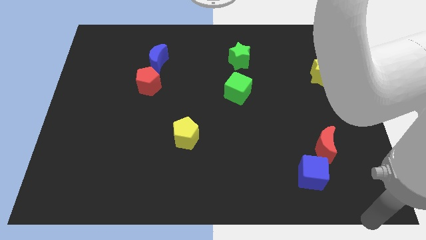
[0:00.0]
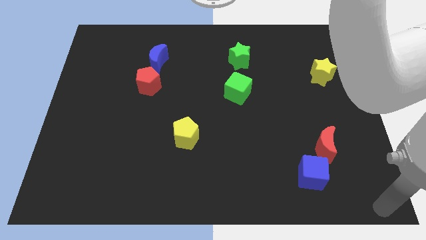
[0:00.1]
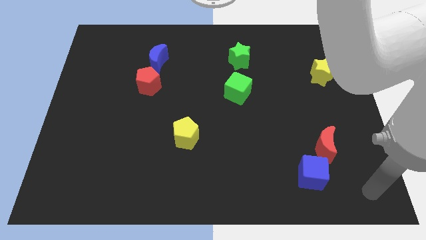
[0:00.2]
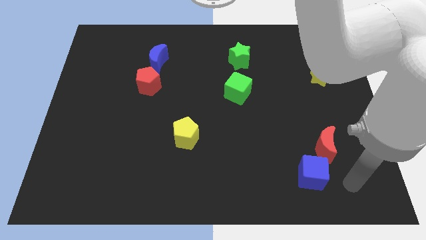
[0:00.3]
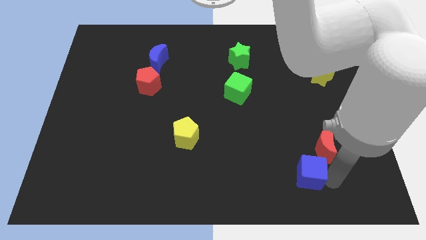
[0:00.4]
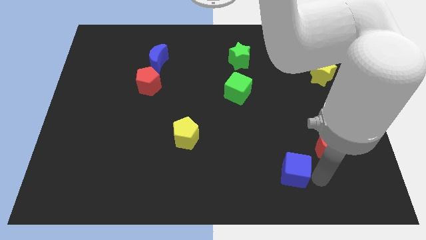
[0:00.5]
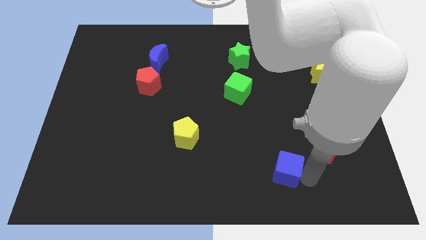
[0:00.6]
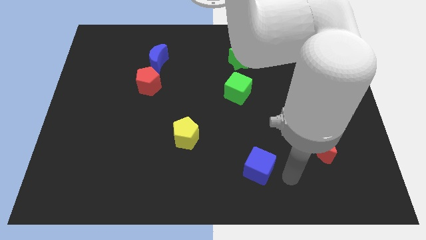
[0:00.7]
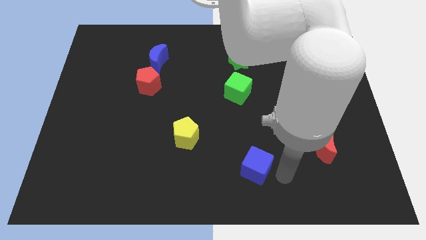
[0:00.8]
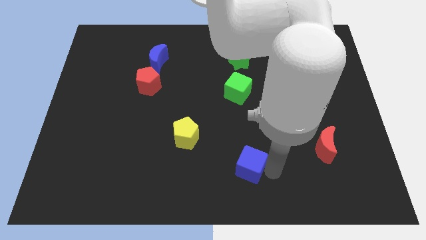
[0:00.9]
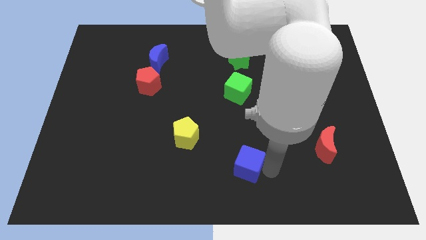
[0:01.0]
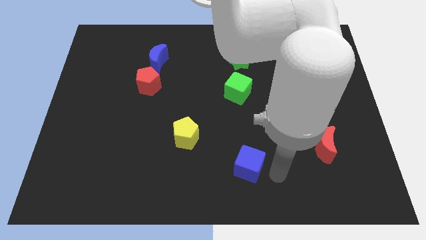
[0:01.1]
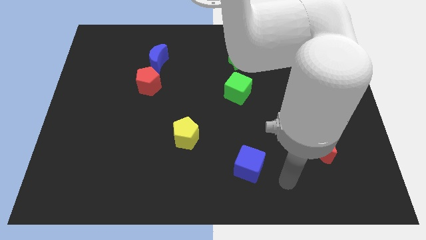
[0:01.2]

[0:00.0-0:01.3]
move the blue cube below the green cube

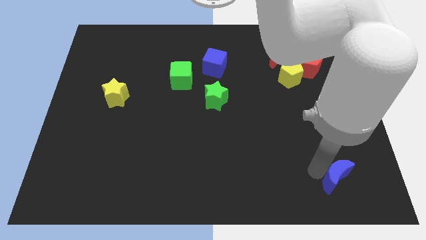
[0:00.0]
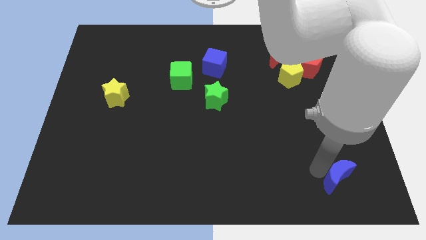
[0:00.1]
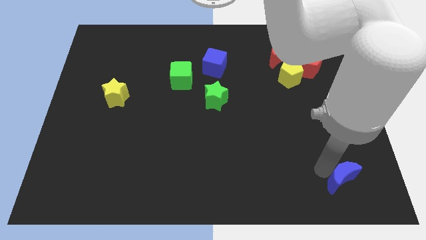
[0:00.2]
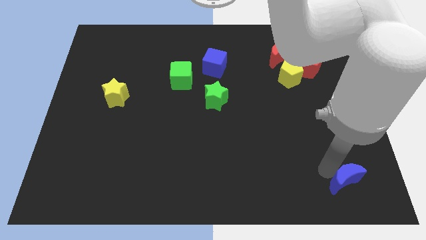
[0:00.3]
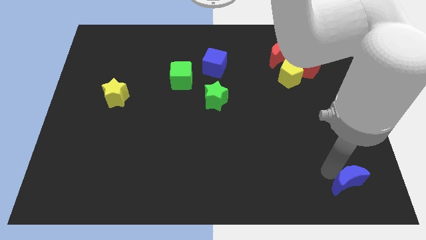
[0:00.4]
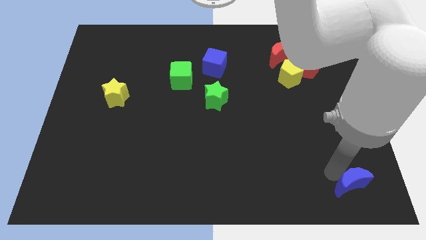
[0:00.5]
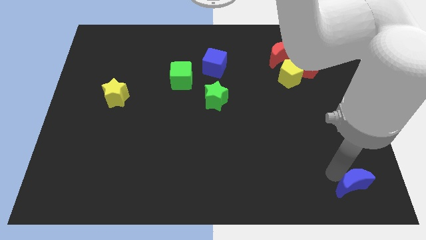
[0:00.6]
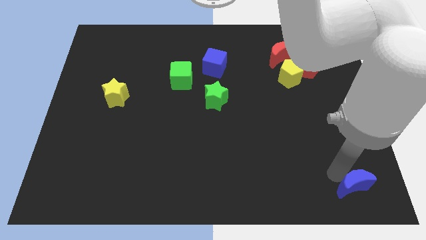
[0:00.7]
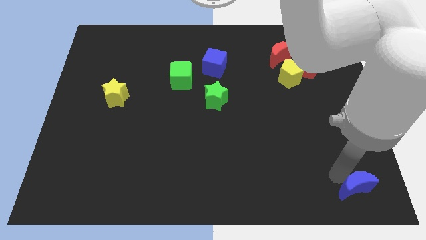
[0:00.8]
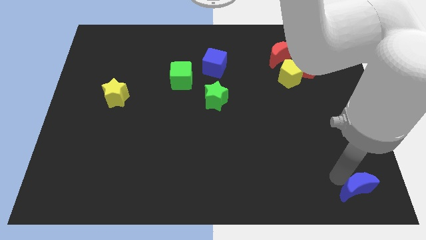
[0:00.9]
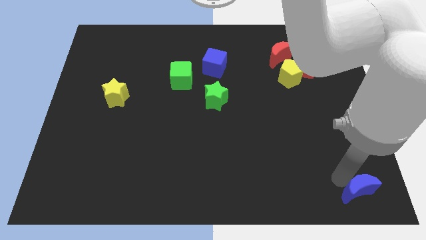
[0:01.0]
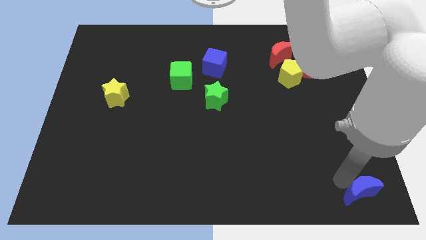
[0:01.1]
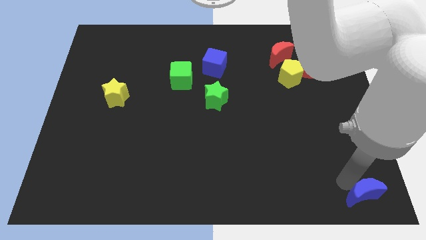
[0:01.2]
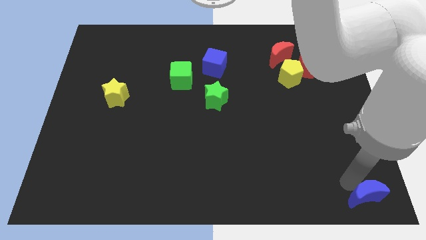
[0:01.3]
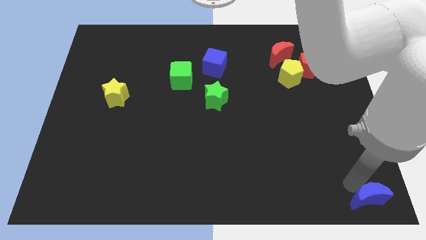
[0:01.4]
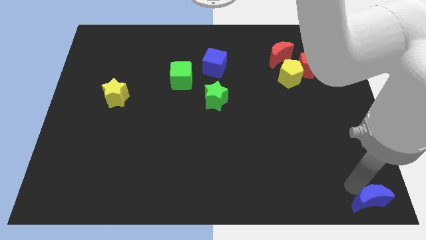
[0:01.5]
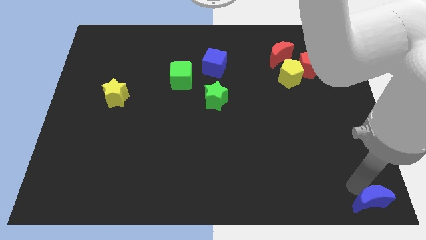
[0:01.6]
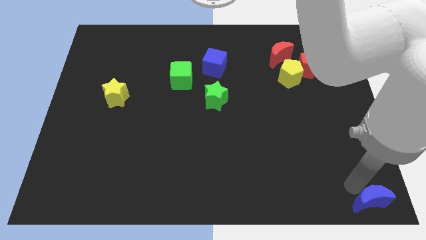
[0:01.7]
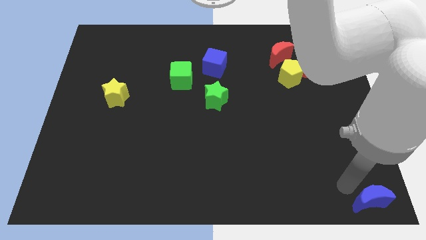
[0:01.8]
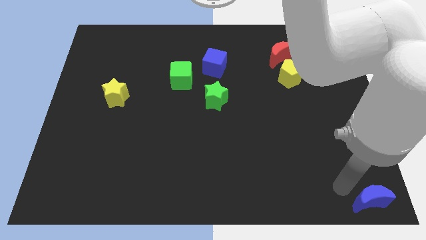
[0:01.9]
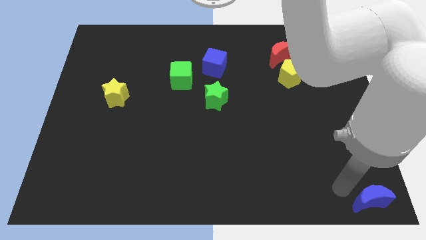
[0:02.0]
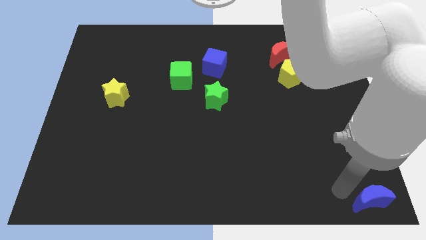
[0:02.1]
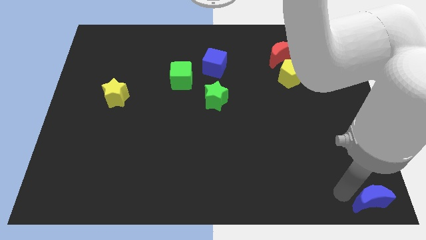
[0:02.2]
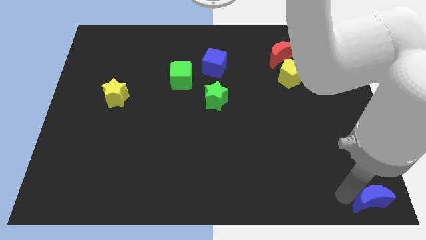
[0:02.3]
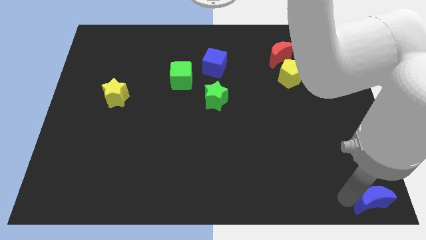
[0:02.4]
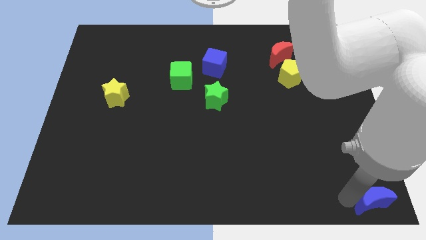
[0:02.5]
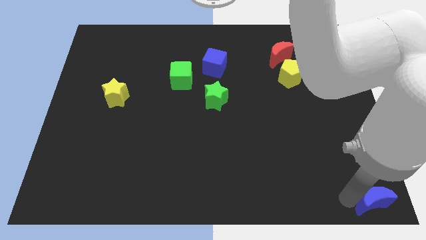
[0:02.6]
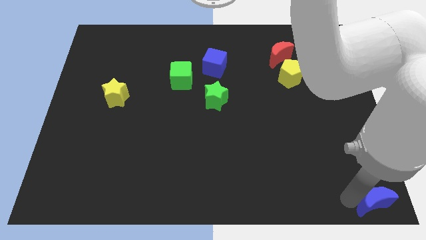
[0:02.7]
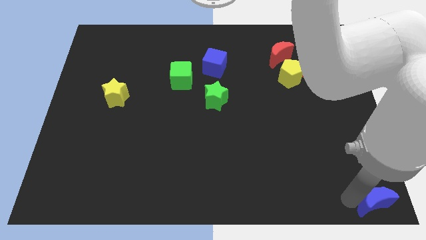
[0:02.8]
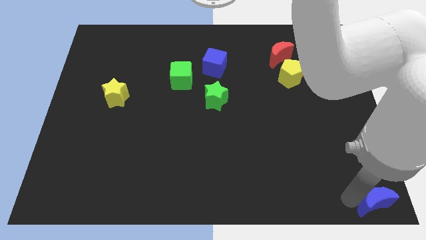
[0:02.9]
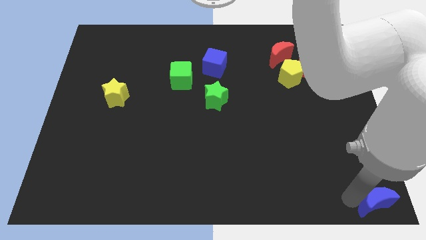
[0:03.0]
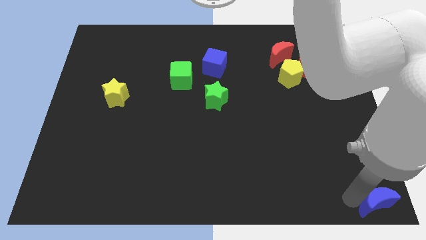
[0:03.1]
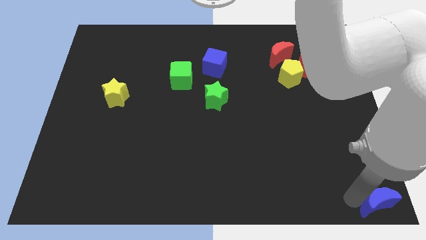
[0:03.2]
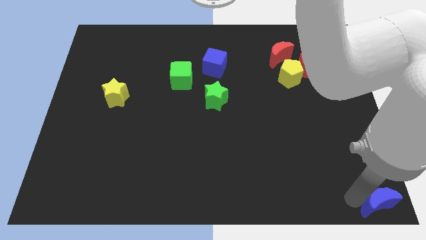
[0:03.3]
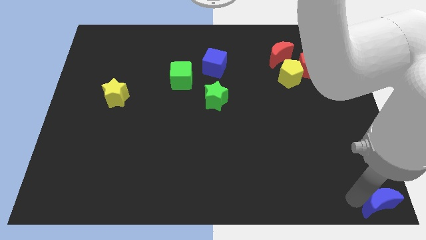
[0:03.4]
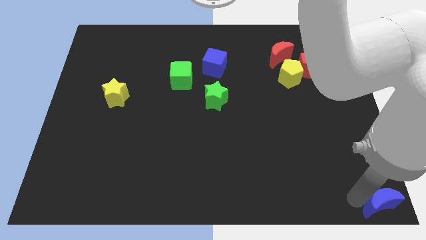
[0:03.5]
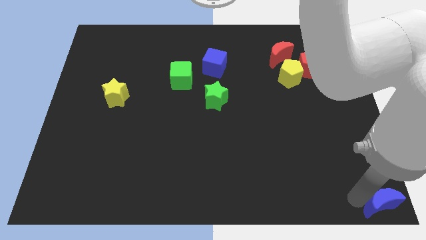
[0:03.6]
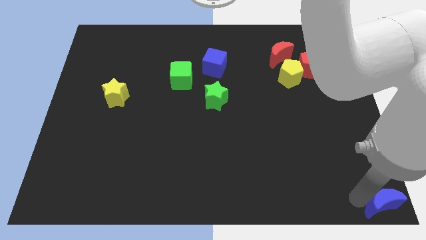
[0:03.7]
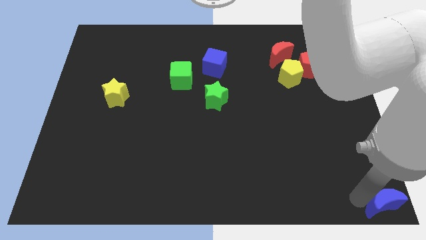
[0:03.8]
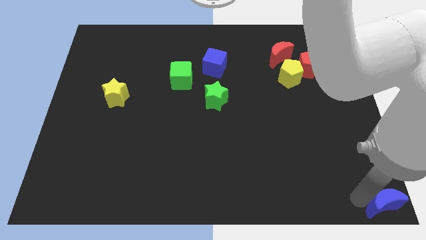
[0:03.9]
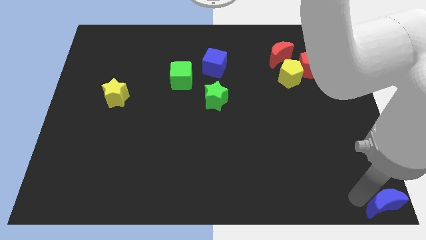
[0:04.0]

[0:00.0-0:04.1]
push the blue crescent at the bottom right corner of the board

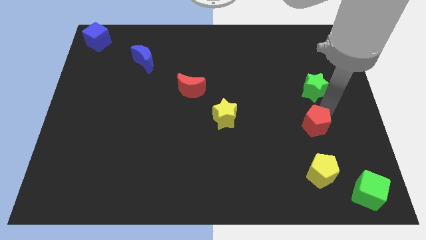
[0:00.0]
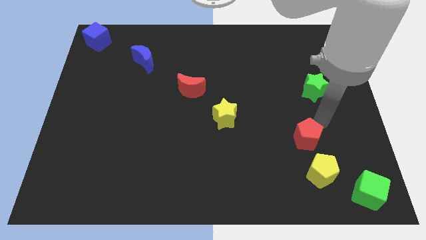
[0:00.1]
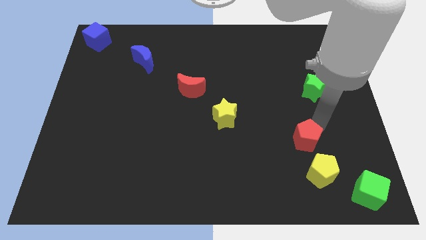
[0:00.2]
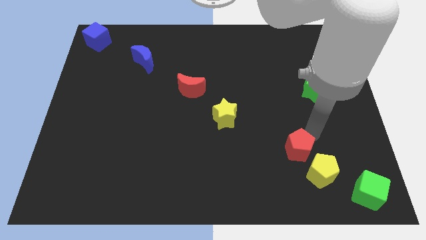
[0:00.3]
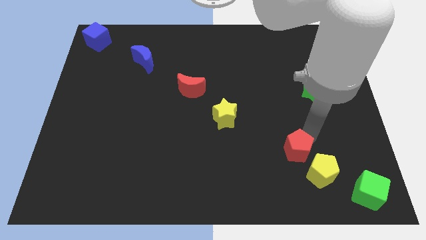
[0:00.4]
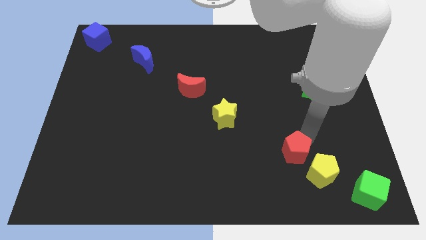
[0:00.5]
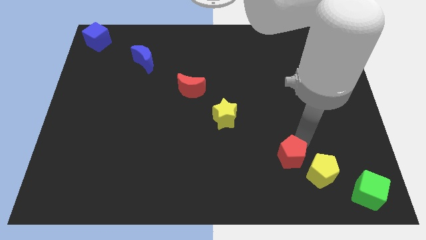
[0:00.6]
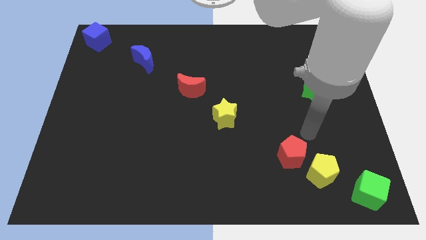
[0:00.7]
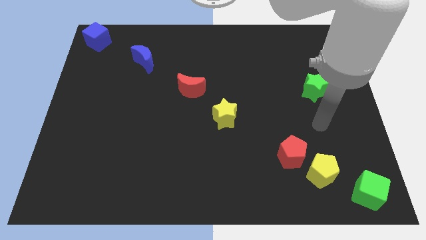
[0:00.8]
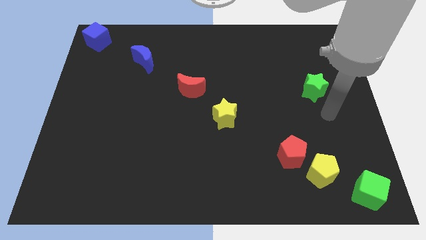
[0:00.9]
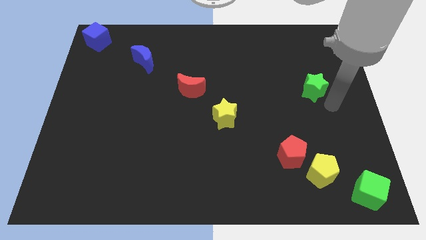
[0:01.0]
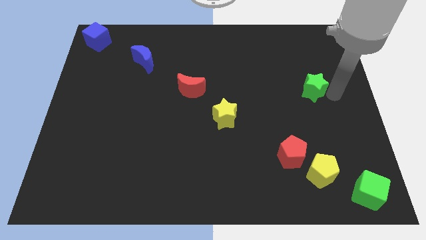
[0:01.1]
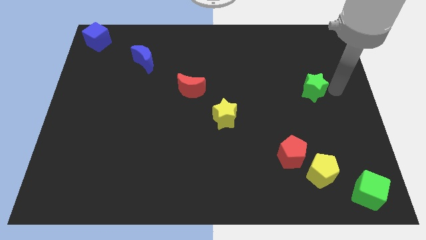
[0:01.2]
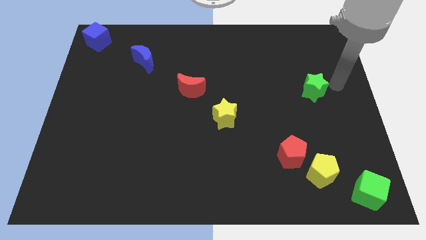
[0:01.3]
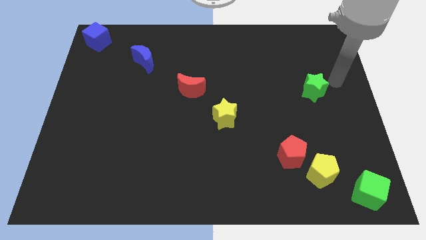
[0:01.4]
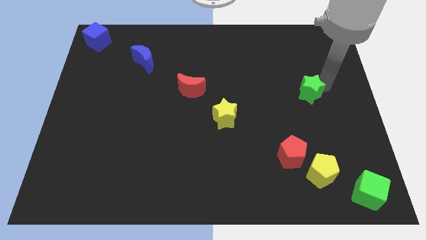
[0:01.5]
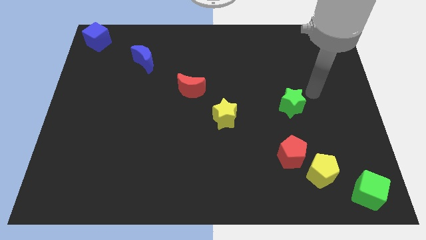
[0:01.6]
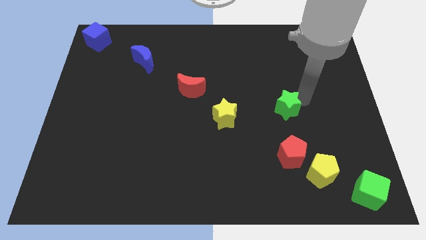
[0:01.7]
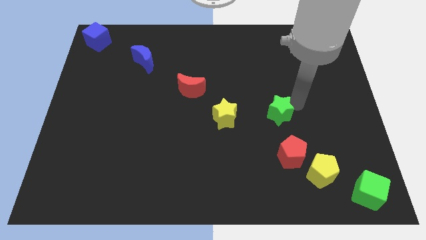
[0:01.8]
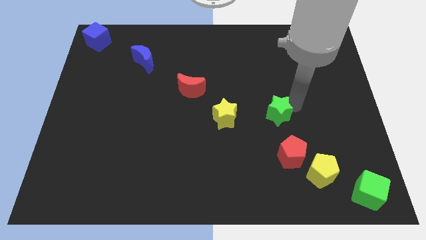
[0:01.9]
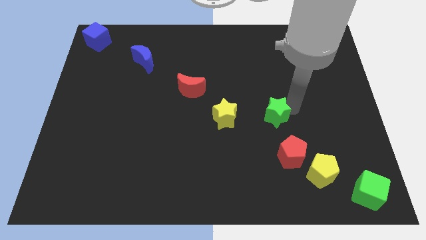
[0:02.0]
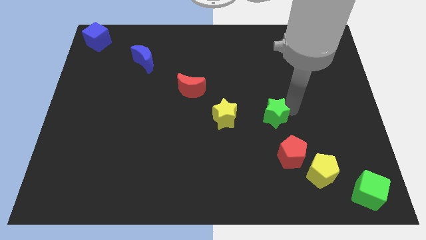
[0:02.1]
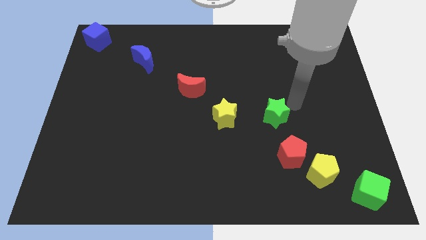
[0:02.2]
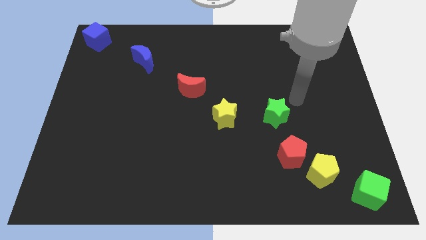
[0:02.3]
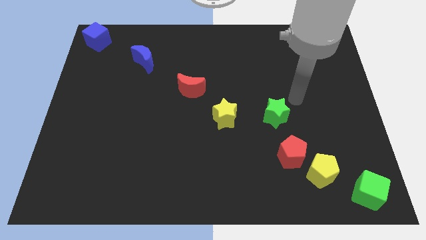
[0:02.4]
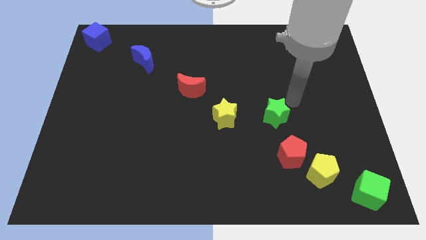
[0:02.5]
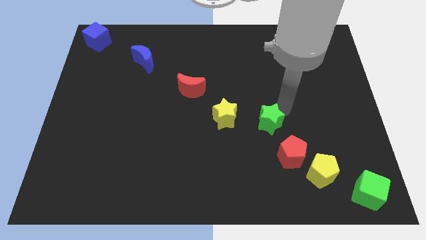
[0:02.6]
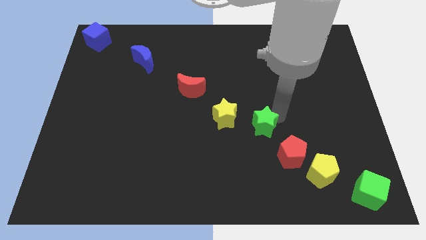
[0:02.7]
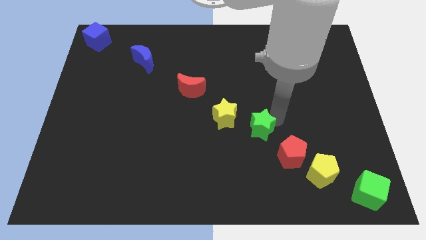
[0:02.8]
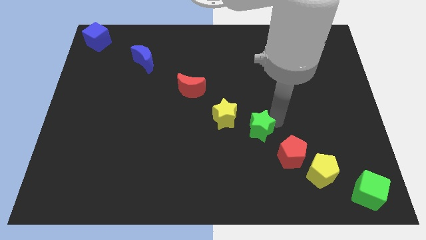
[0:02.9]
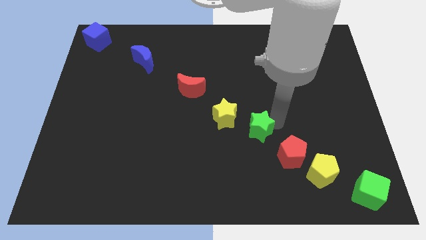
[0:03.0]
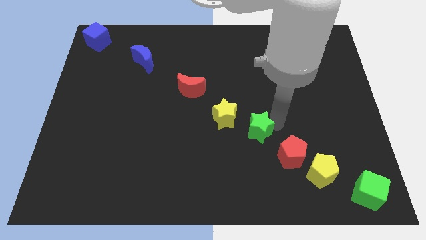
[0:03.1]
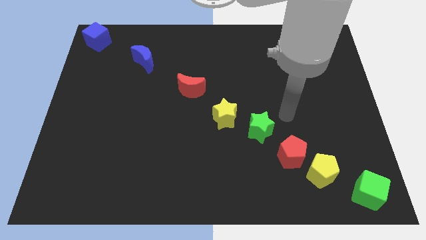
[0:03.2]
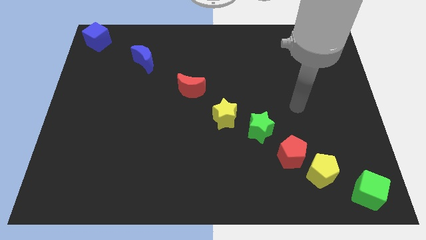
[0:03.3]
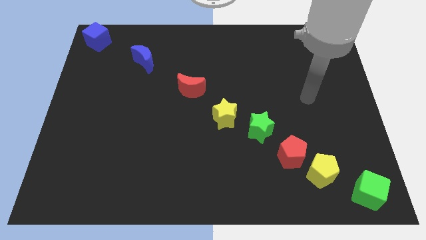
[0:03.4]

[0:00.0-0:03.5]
push green star in between yellow star and red pentagon to form a diagonal line of blocks

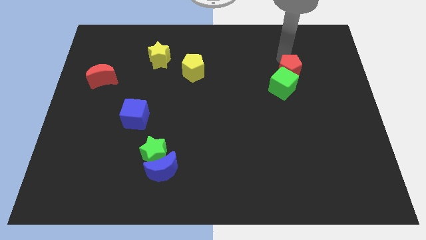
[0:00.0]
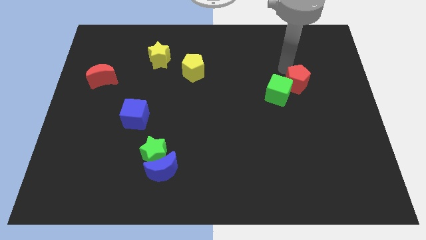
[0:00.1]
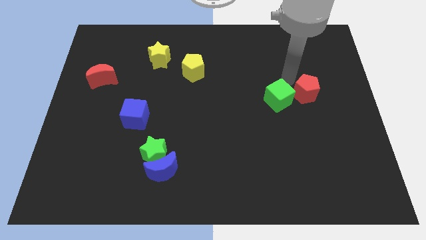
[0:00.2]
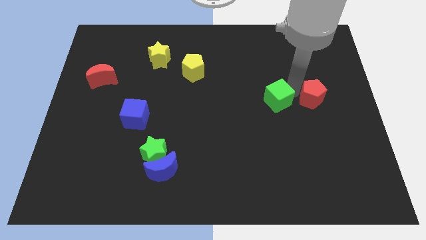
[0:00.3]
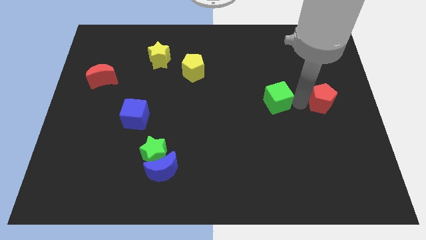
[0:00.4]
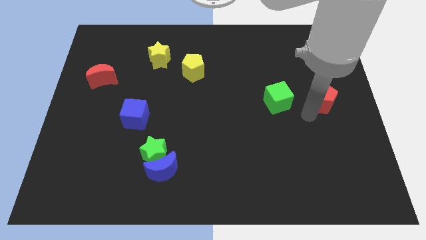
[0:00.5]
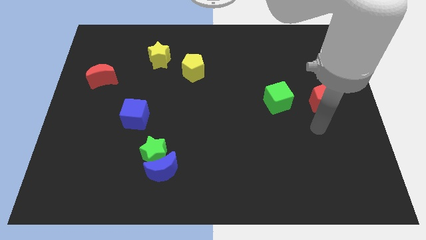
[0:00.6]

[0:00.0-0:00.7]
move the red pentagon slightly right to the green cube
